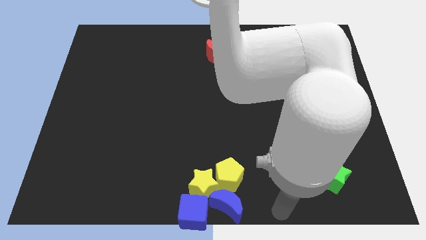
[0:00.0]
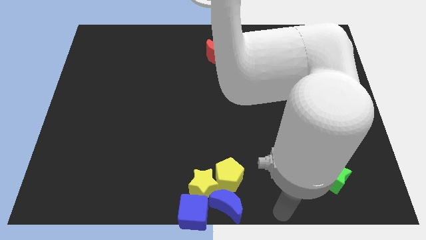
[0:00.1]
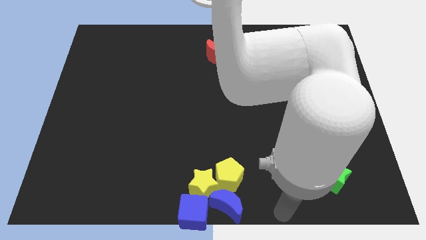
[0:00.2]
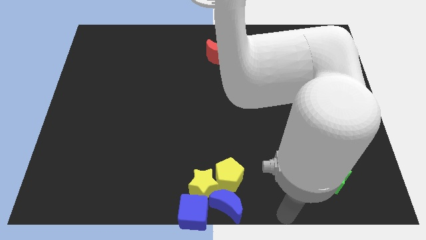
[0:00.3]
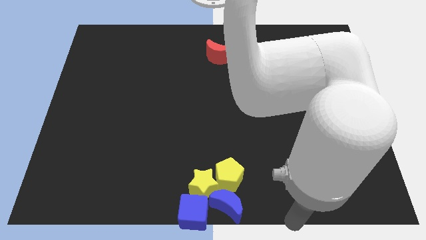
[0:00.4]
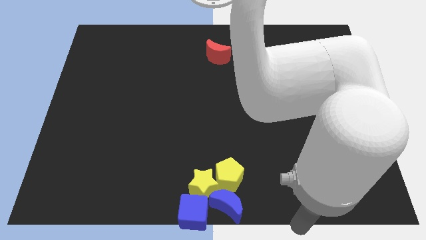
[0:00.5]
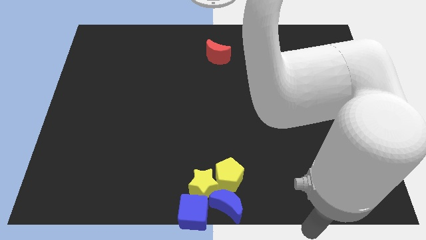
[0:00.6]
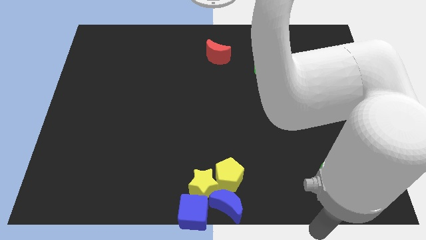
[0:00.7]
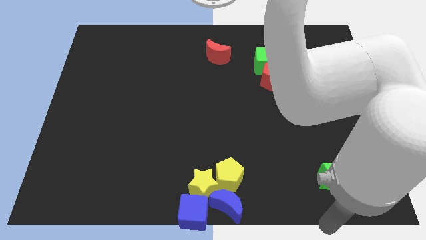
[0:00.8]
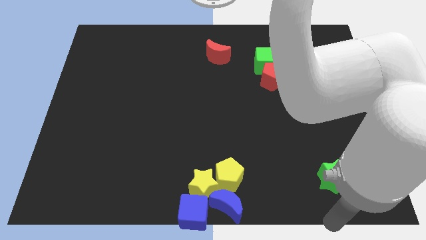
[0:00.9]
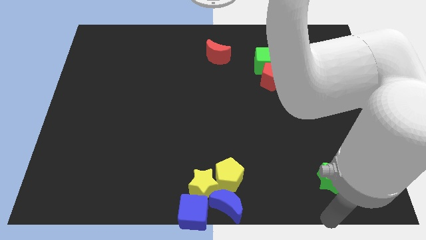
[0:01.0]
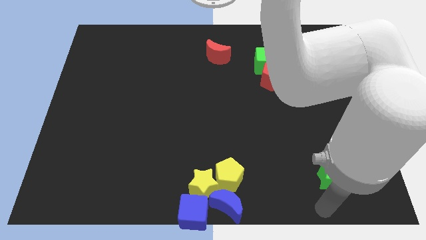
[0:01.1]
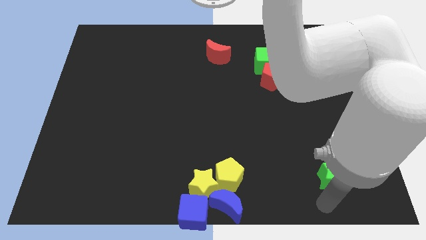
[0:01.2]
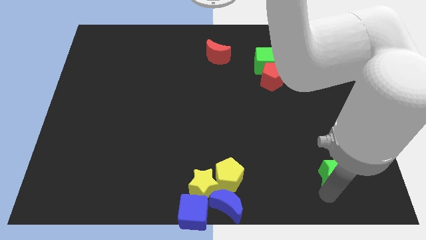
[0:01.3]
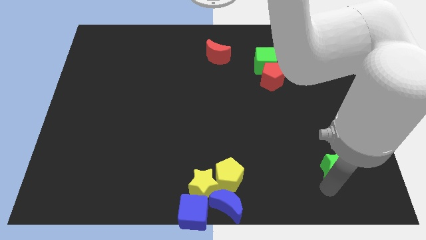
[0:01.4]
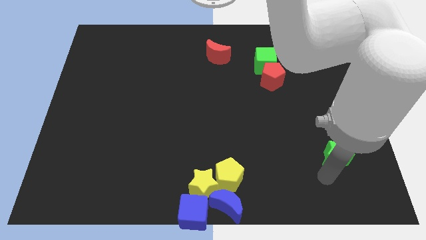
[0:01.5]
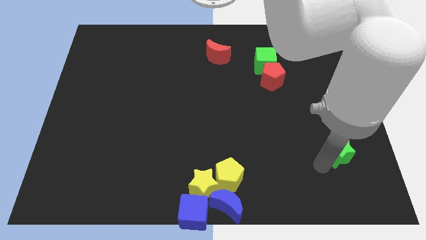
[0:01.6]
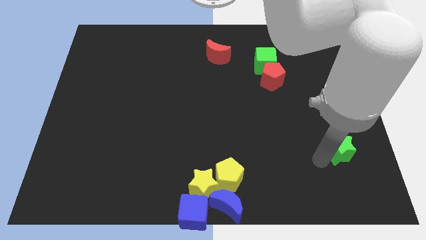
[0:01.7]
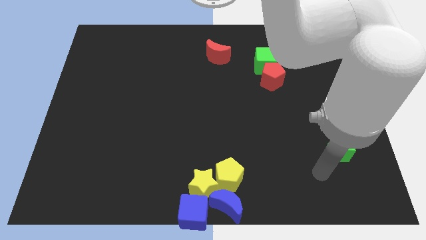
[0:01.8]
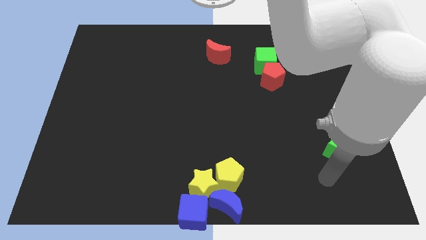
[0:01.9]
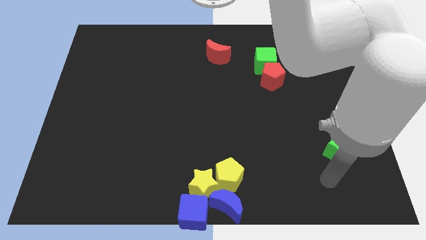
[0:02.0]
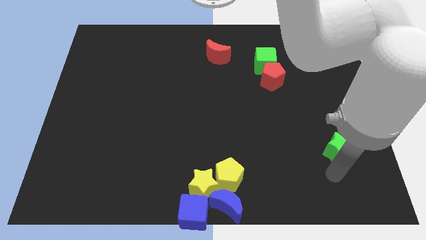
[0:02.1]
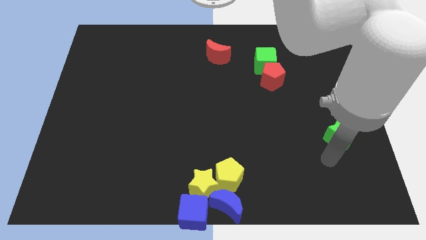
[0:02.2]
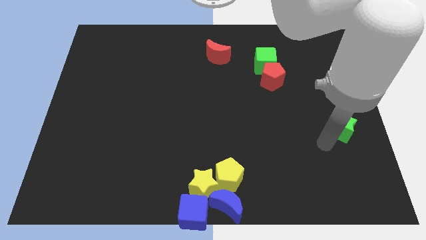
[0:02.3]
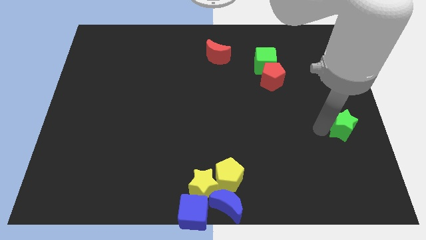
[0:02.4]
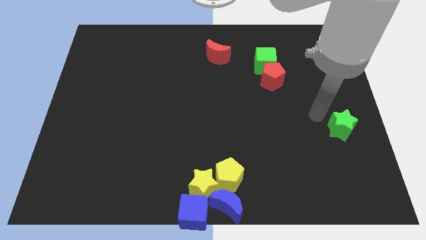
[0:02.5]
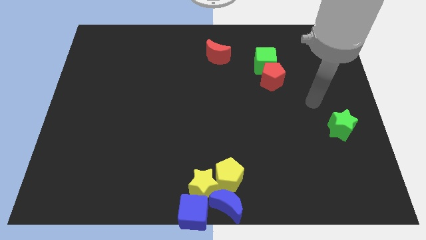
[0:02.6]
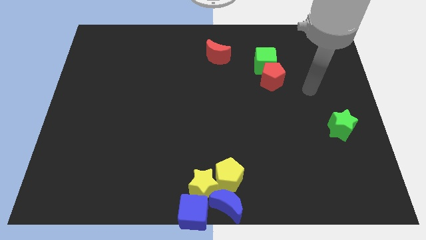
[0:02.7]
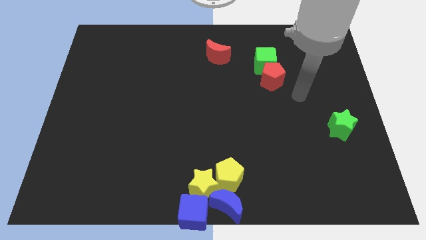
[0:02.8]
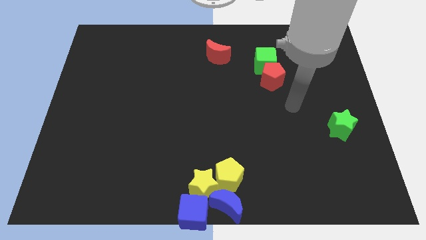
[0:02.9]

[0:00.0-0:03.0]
slightly push the green star towards center right of the board

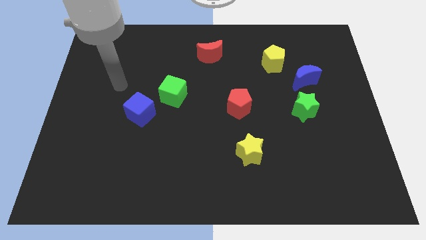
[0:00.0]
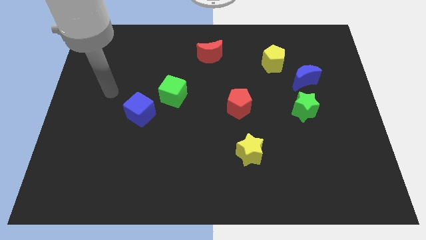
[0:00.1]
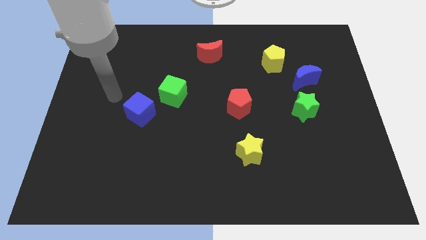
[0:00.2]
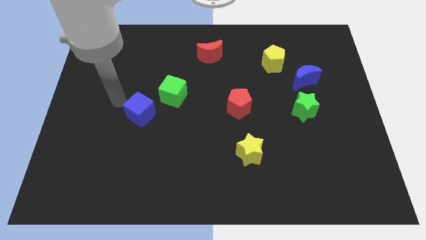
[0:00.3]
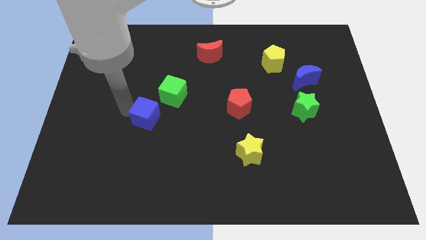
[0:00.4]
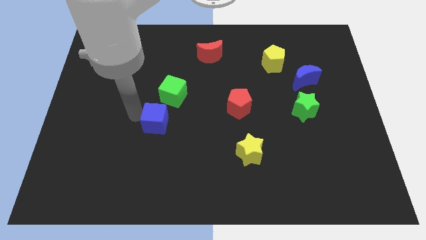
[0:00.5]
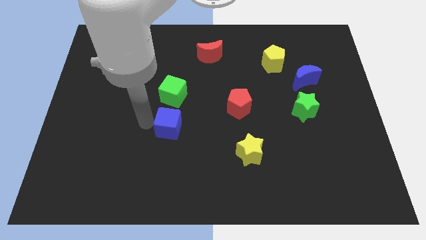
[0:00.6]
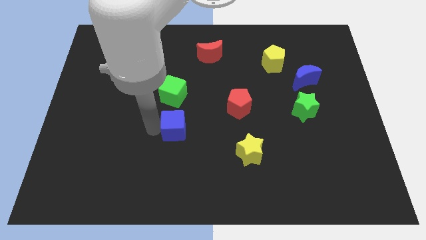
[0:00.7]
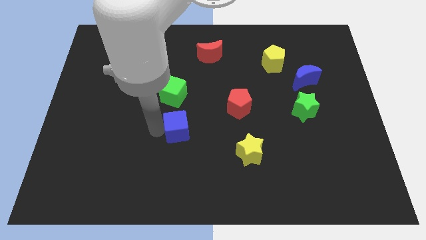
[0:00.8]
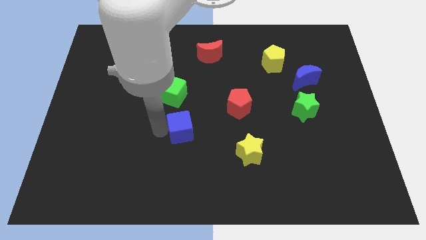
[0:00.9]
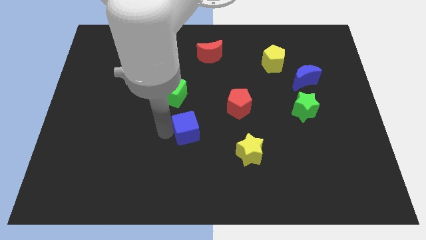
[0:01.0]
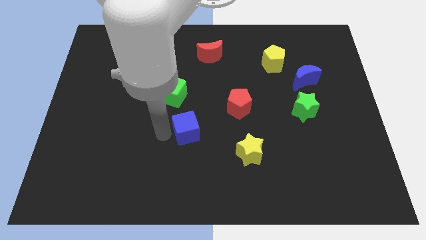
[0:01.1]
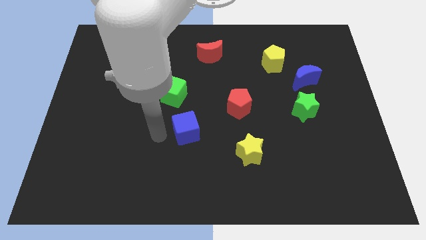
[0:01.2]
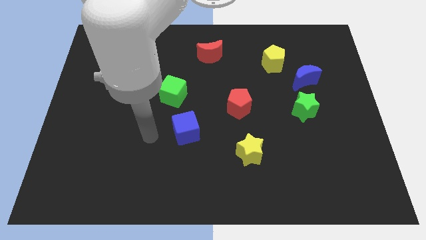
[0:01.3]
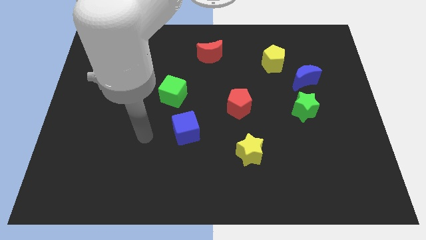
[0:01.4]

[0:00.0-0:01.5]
move the blue cube towards the yellow star

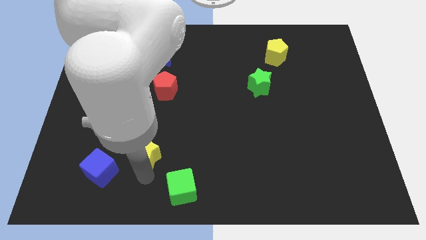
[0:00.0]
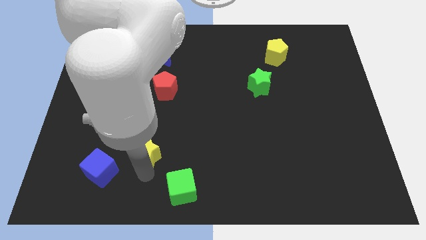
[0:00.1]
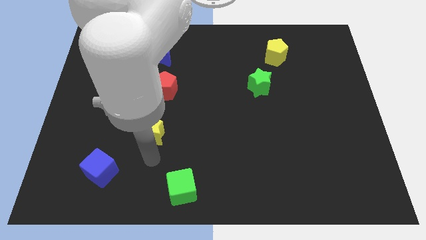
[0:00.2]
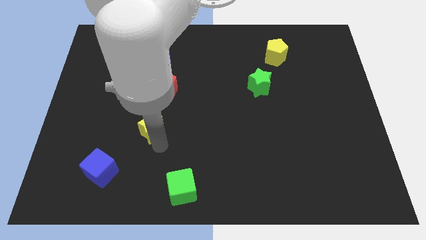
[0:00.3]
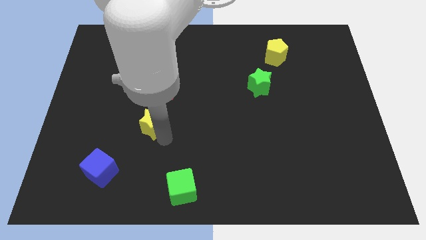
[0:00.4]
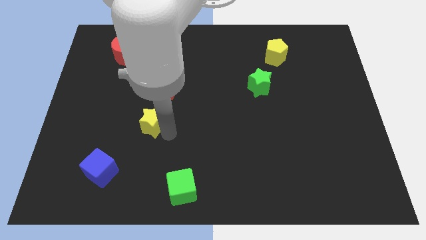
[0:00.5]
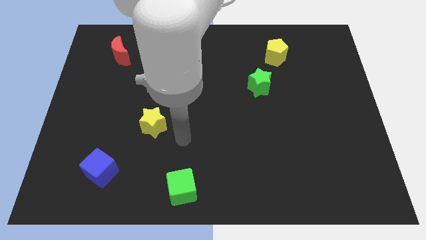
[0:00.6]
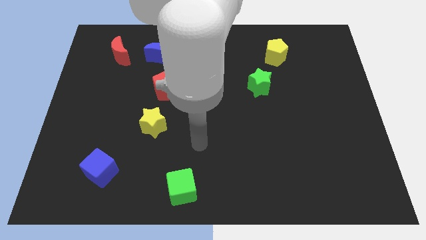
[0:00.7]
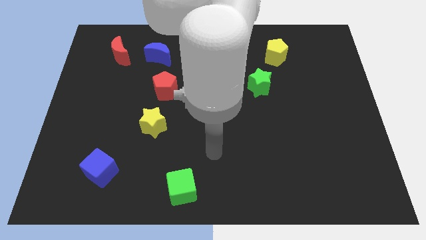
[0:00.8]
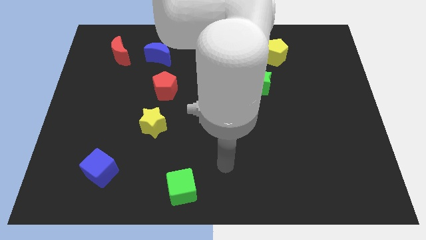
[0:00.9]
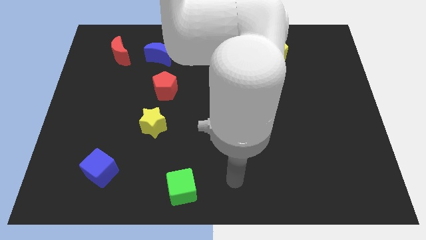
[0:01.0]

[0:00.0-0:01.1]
push the yellow star slightly up

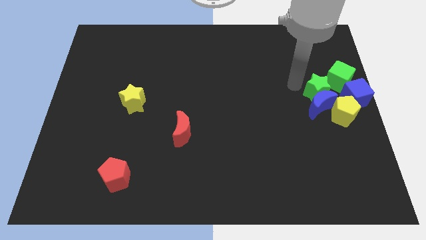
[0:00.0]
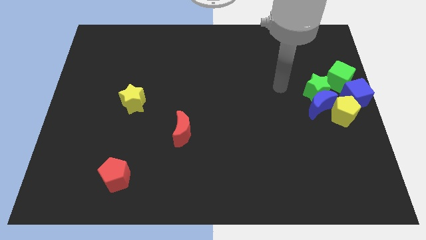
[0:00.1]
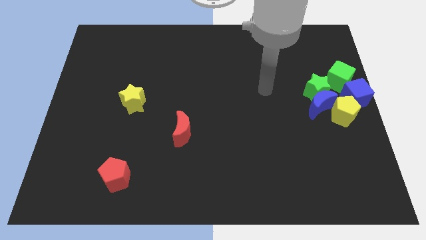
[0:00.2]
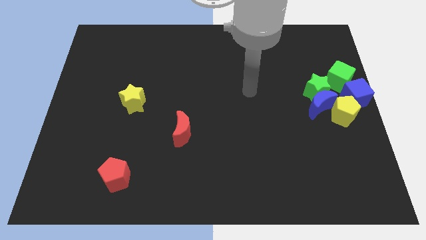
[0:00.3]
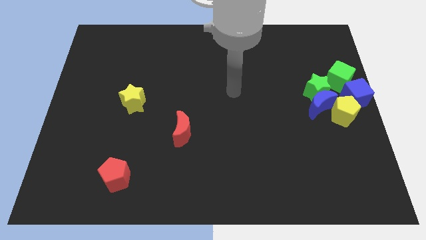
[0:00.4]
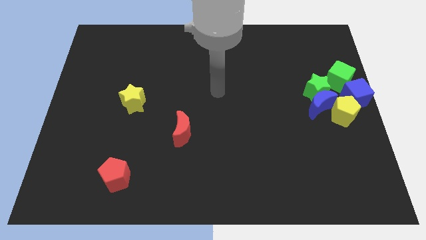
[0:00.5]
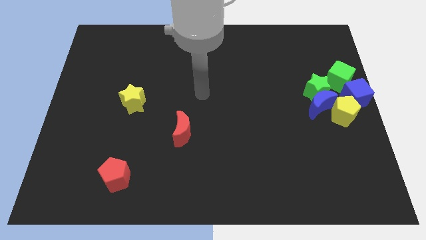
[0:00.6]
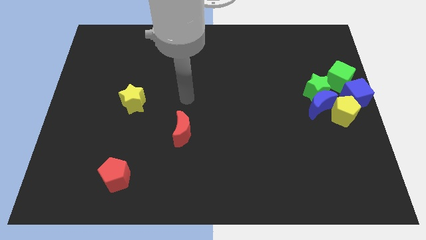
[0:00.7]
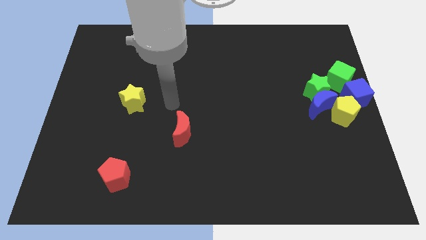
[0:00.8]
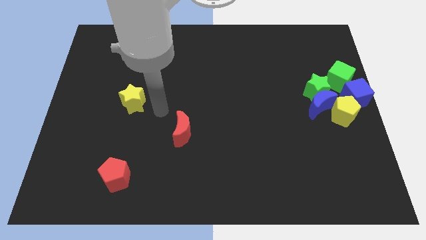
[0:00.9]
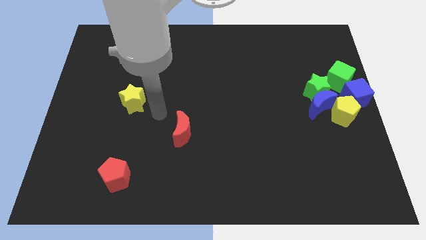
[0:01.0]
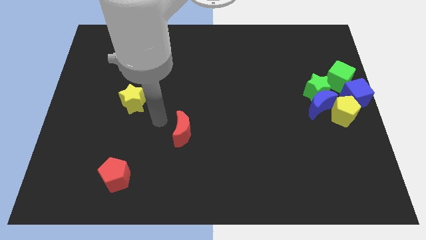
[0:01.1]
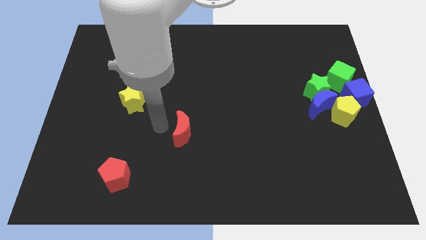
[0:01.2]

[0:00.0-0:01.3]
point your arm at the left of the red crescent

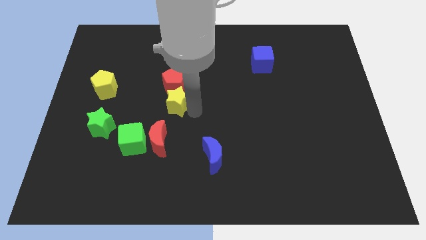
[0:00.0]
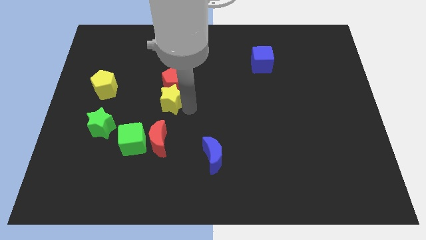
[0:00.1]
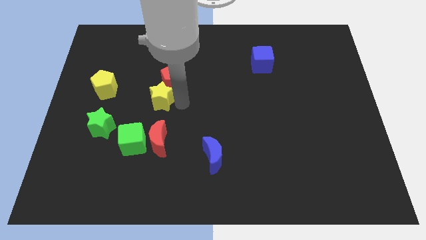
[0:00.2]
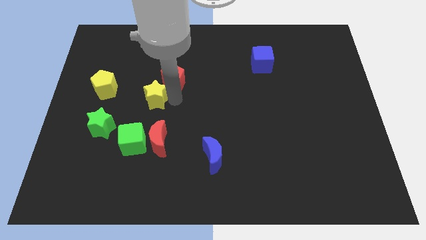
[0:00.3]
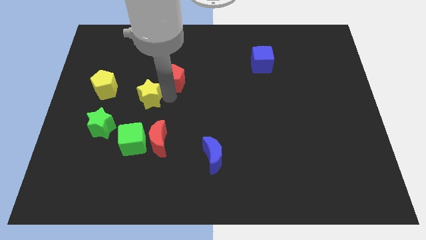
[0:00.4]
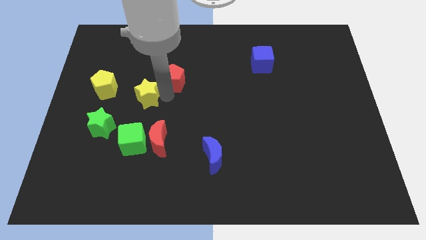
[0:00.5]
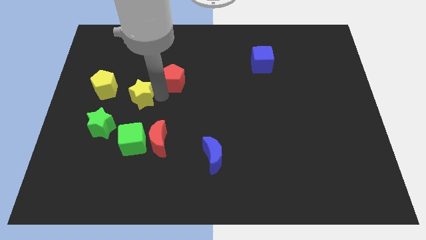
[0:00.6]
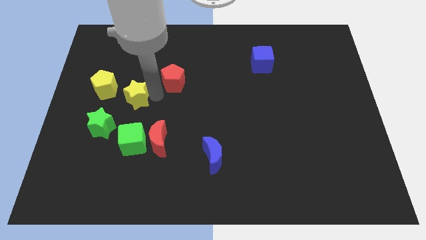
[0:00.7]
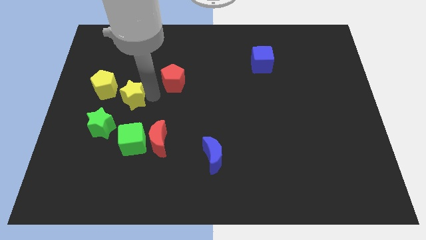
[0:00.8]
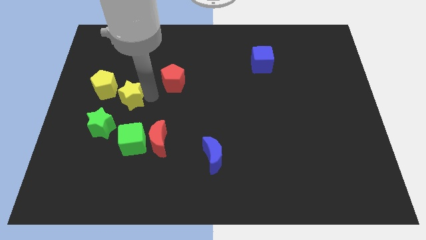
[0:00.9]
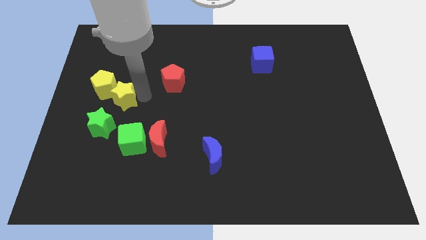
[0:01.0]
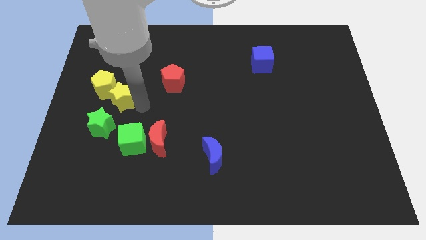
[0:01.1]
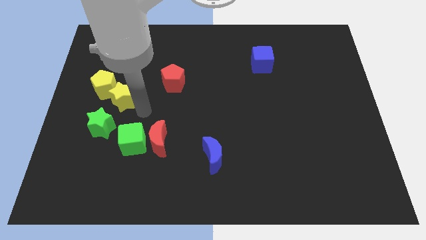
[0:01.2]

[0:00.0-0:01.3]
push the yellow star into yellow pentagon

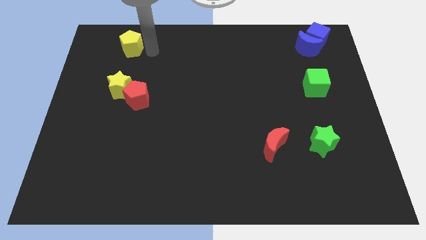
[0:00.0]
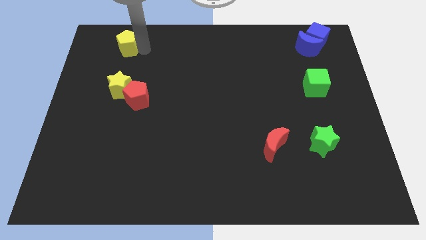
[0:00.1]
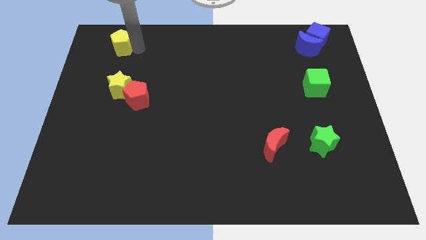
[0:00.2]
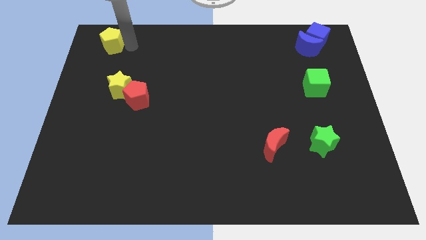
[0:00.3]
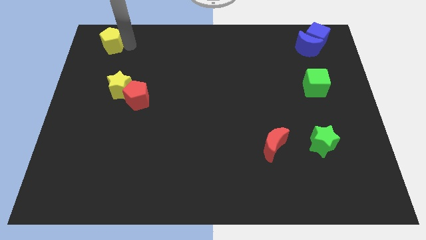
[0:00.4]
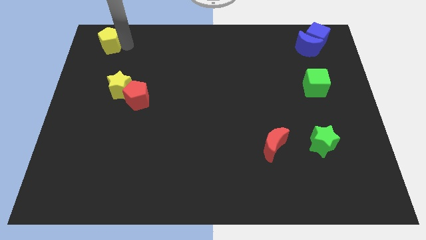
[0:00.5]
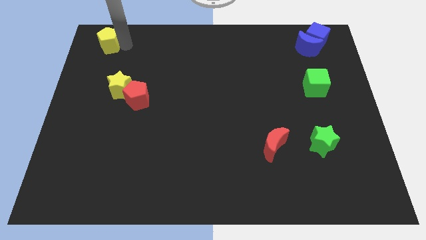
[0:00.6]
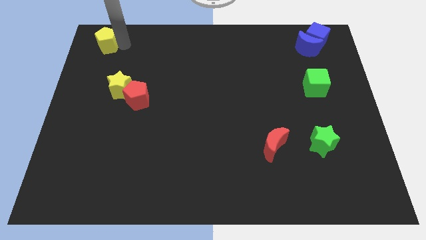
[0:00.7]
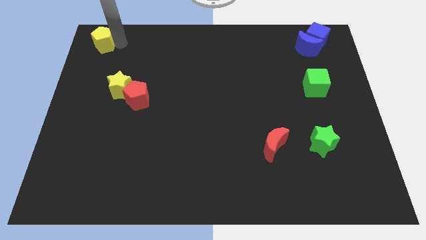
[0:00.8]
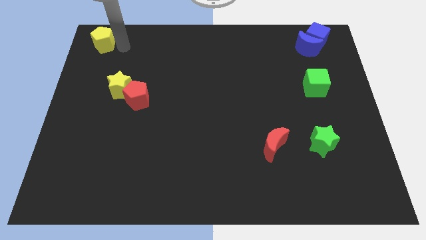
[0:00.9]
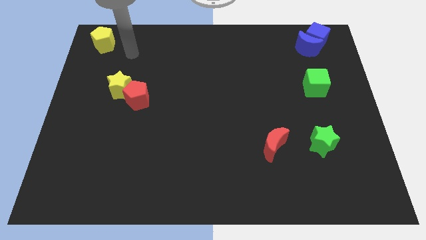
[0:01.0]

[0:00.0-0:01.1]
push yellow pentagon to the left
